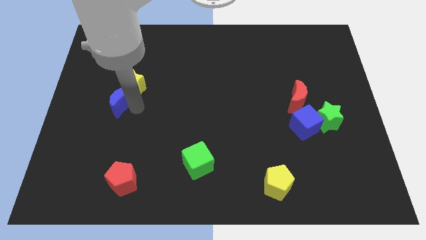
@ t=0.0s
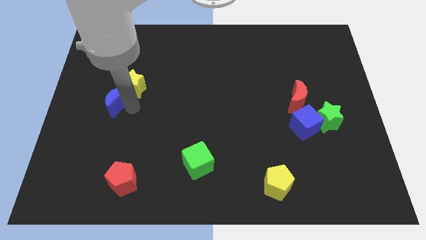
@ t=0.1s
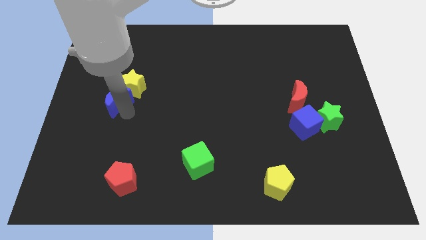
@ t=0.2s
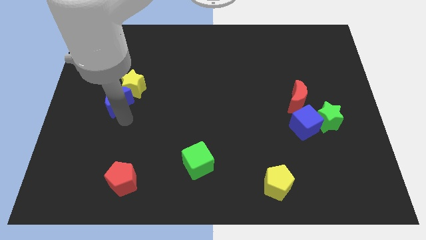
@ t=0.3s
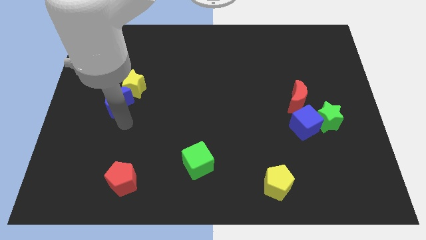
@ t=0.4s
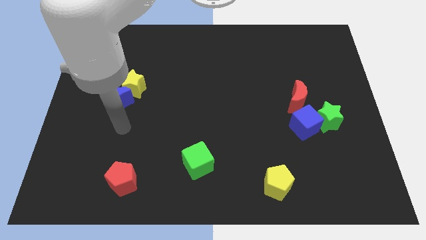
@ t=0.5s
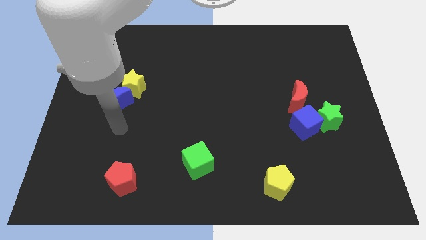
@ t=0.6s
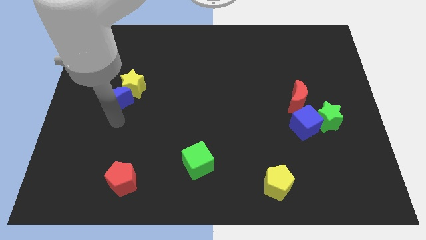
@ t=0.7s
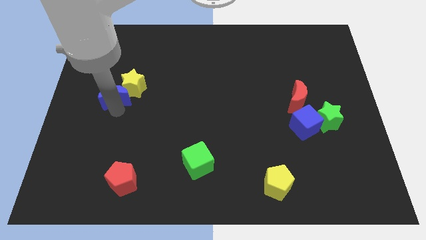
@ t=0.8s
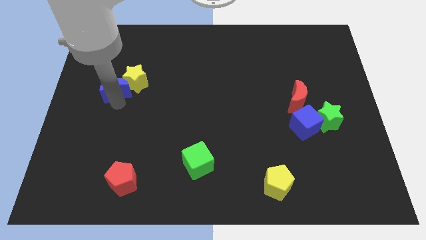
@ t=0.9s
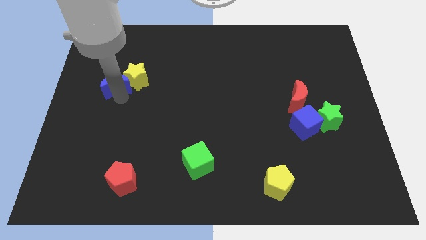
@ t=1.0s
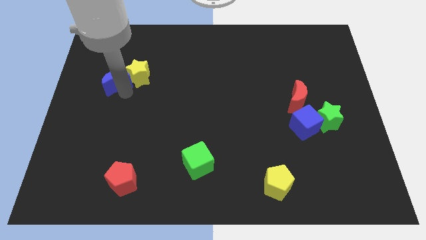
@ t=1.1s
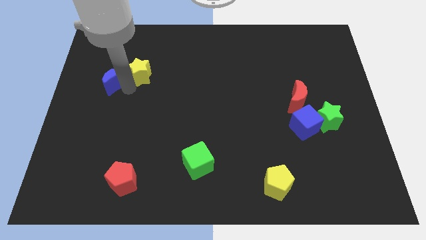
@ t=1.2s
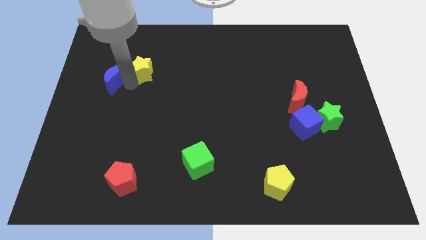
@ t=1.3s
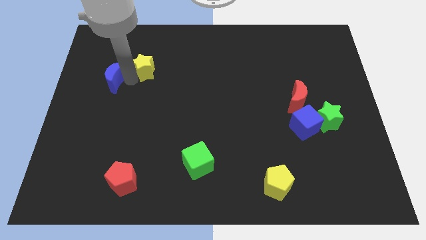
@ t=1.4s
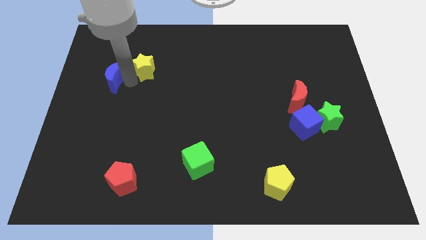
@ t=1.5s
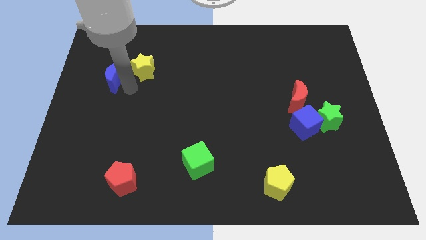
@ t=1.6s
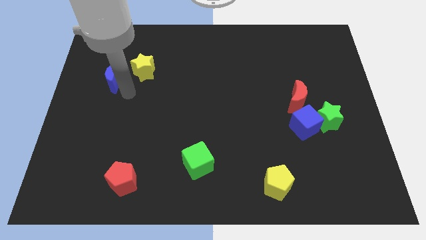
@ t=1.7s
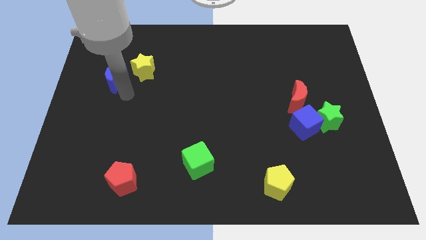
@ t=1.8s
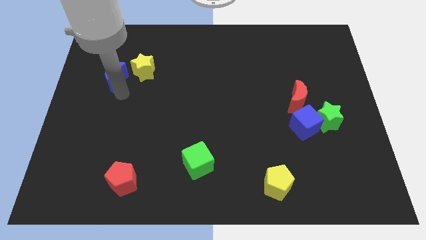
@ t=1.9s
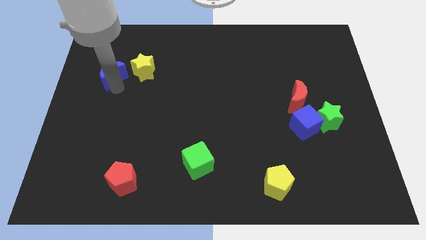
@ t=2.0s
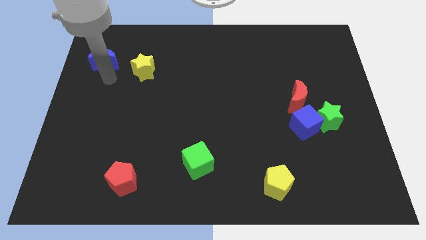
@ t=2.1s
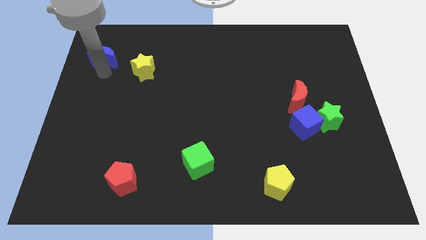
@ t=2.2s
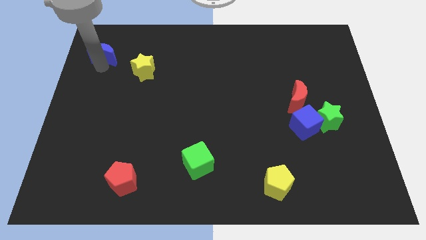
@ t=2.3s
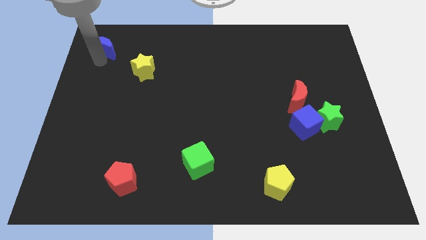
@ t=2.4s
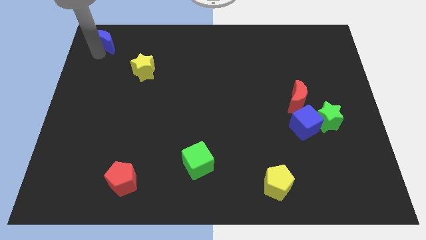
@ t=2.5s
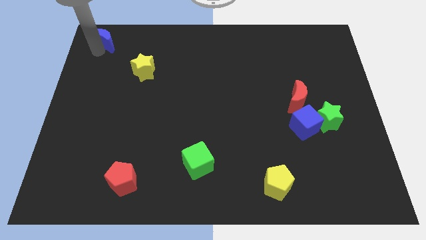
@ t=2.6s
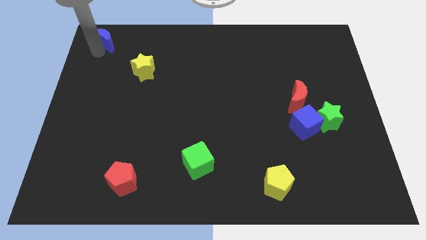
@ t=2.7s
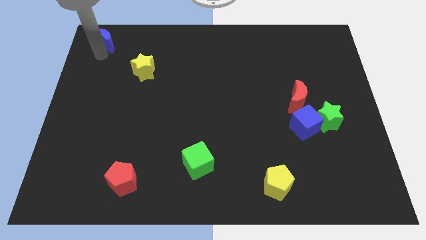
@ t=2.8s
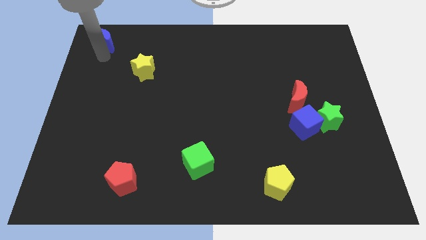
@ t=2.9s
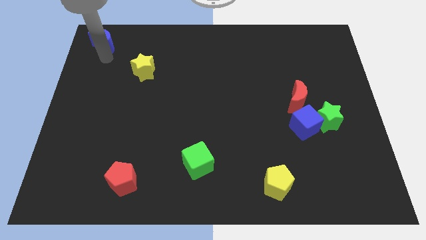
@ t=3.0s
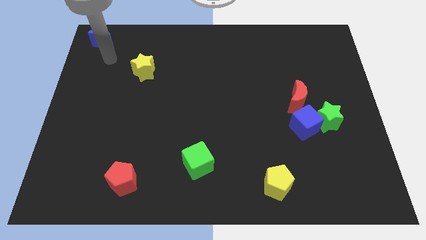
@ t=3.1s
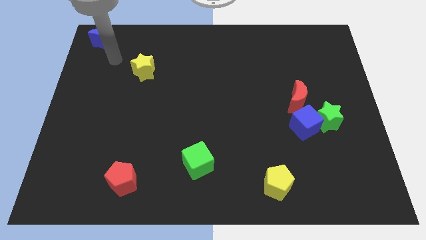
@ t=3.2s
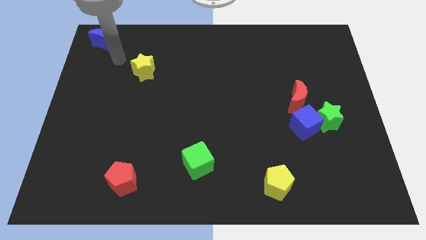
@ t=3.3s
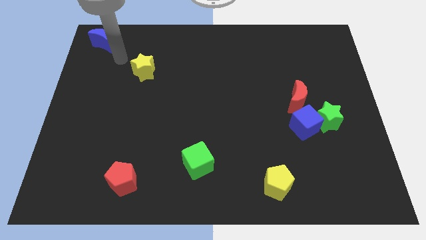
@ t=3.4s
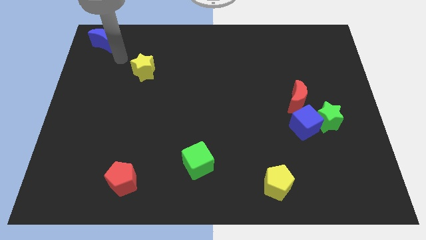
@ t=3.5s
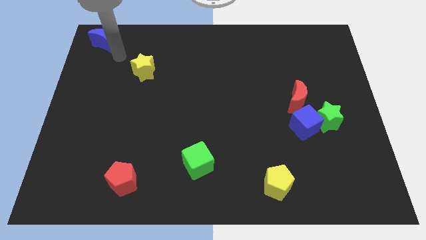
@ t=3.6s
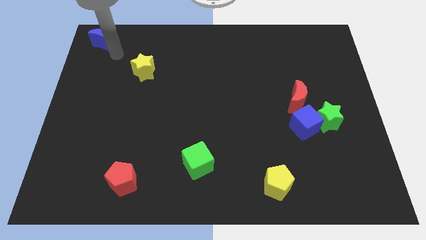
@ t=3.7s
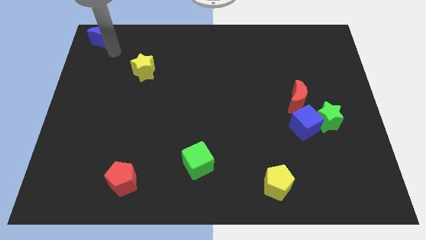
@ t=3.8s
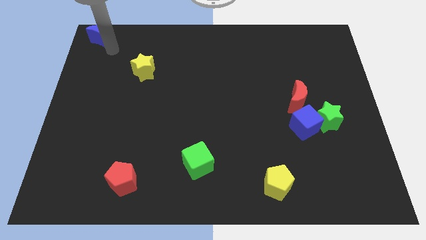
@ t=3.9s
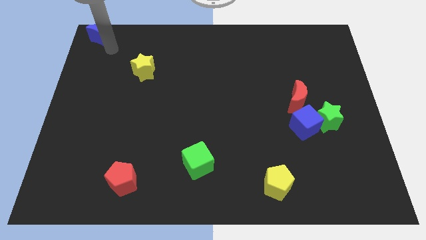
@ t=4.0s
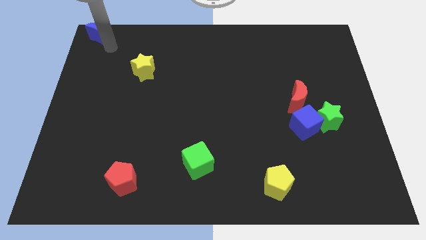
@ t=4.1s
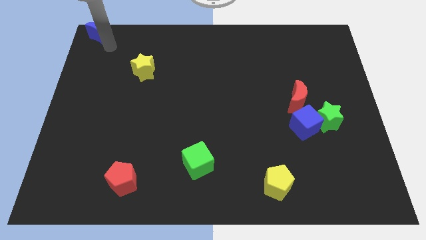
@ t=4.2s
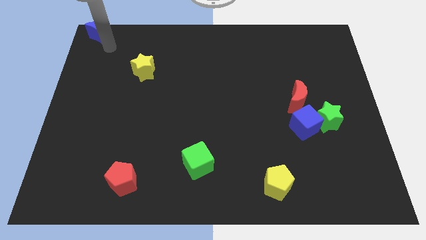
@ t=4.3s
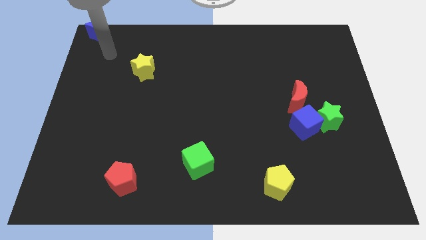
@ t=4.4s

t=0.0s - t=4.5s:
move the blue crescent to the top left to the board

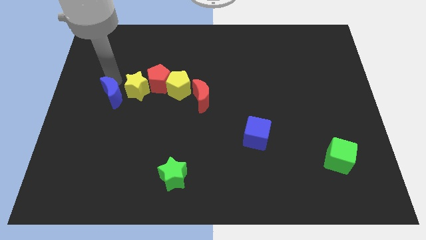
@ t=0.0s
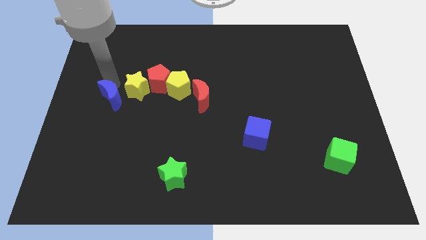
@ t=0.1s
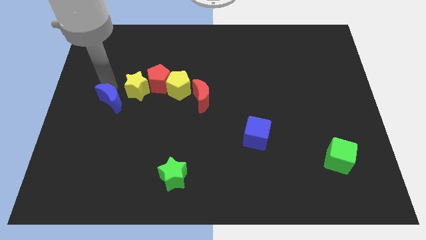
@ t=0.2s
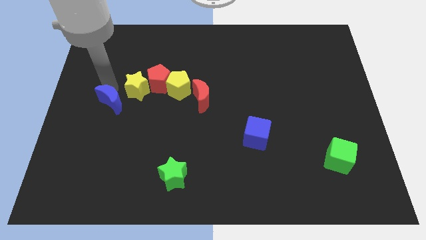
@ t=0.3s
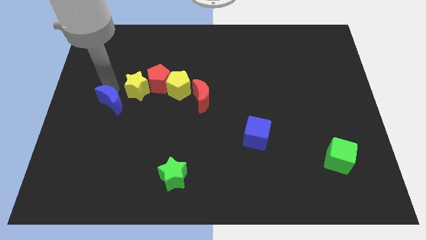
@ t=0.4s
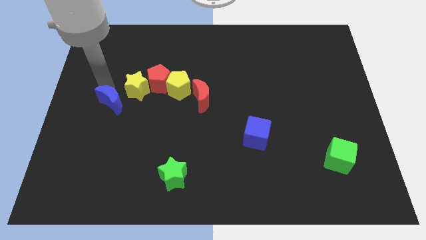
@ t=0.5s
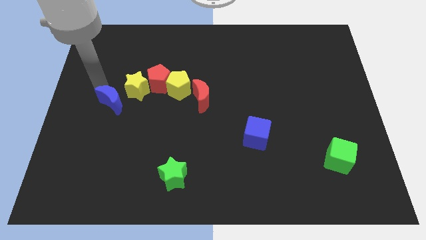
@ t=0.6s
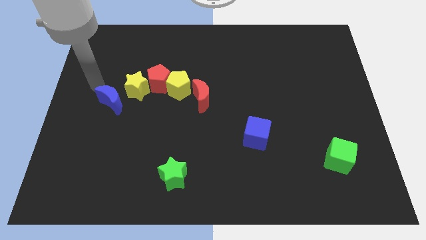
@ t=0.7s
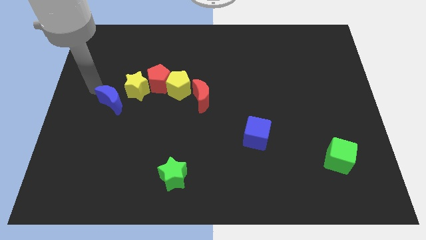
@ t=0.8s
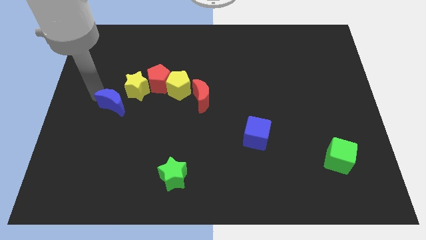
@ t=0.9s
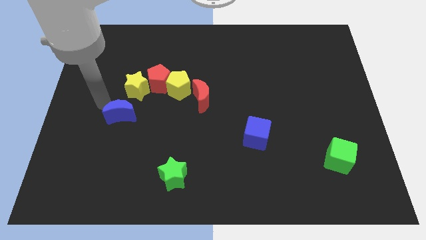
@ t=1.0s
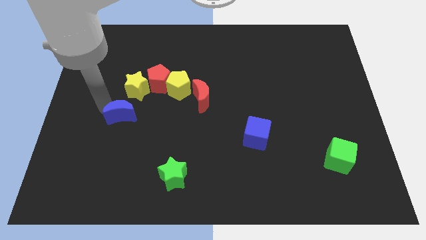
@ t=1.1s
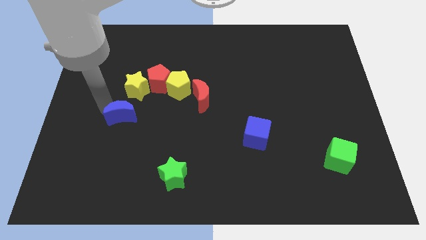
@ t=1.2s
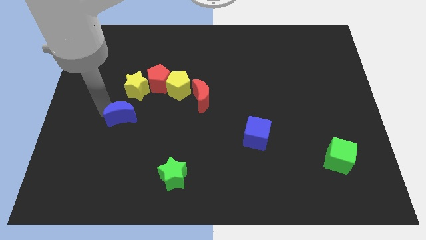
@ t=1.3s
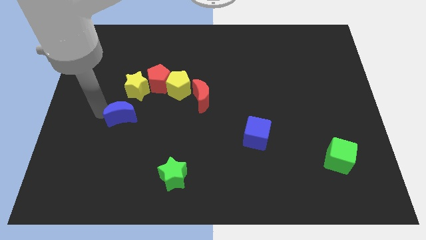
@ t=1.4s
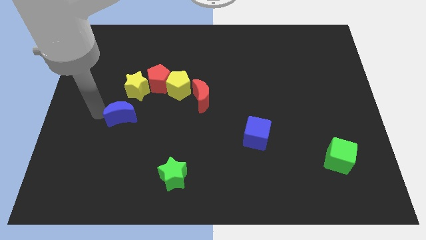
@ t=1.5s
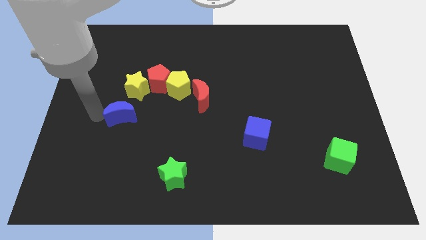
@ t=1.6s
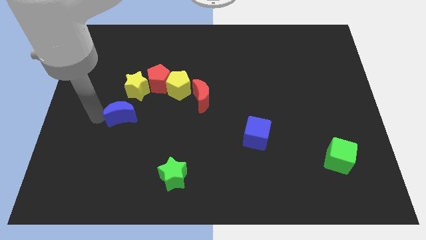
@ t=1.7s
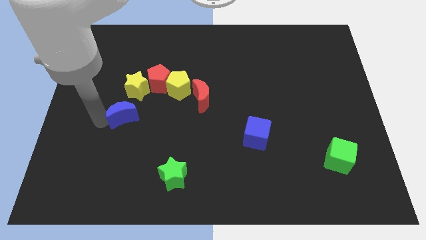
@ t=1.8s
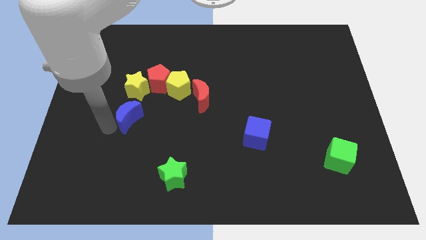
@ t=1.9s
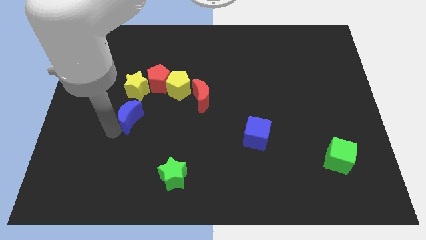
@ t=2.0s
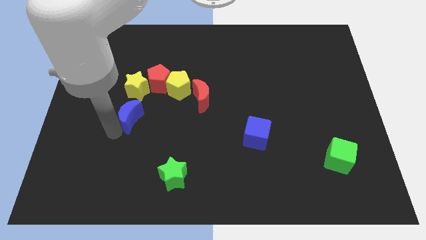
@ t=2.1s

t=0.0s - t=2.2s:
slide blue moon below yellow star

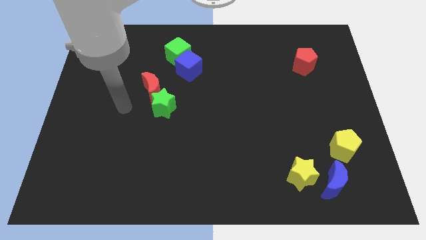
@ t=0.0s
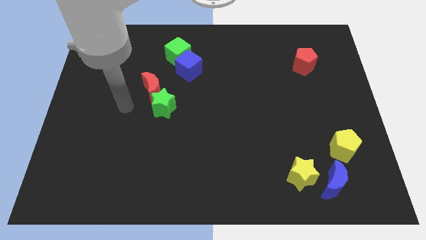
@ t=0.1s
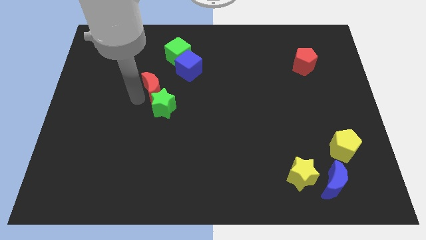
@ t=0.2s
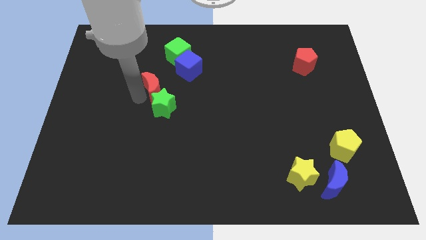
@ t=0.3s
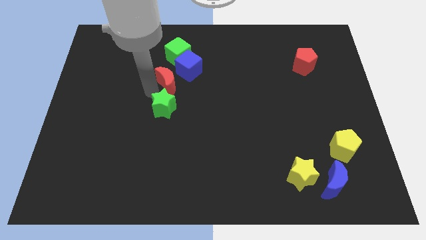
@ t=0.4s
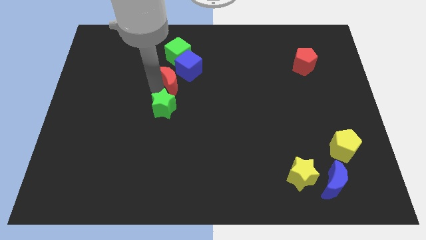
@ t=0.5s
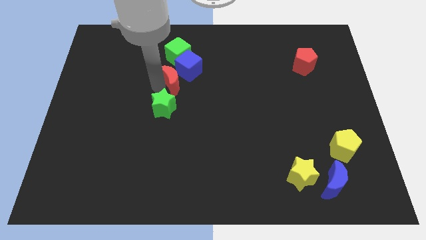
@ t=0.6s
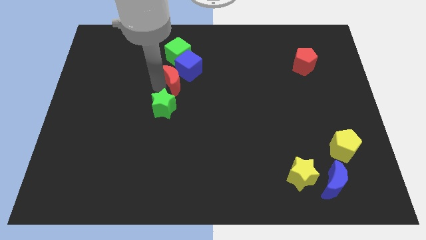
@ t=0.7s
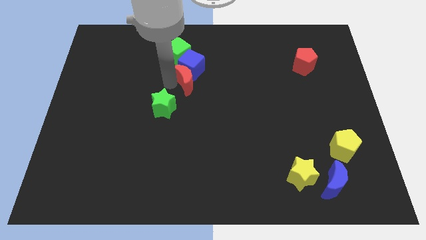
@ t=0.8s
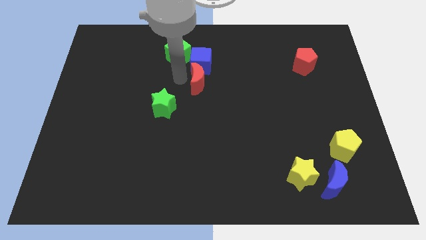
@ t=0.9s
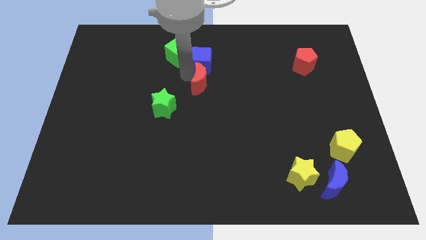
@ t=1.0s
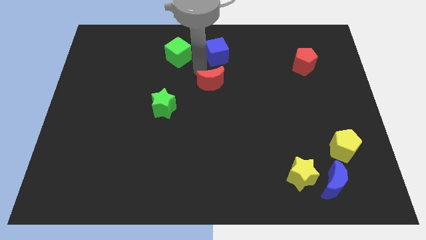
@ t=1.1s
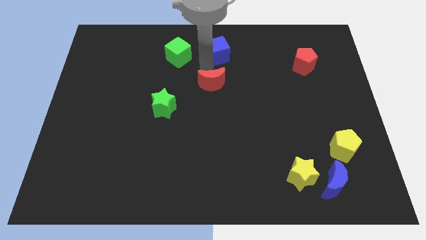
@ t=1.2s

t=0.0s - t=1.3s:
move the red crescent away from the green star

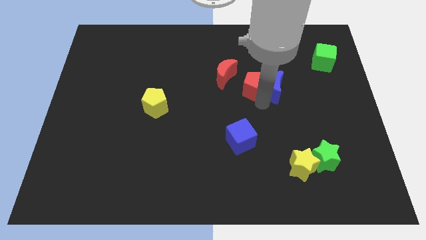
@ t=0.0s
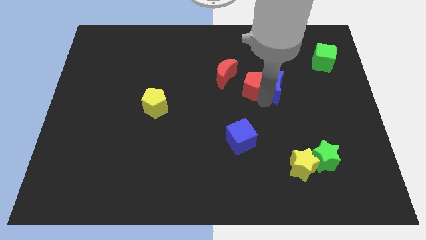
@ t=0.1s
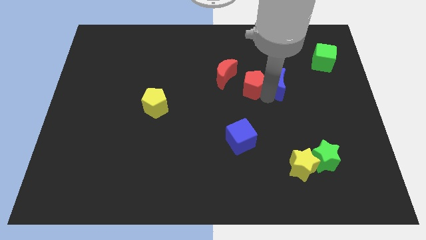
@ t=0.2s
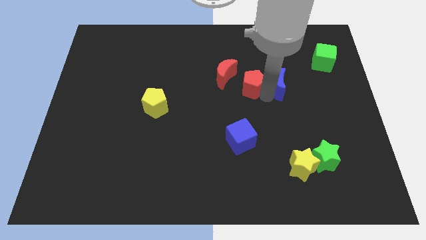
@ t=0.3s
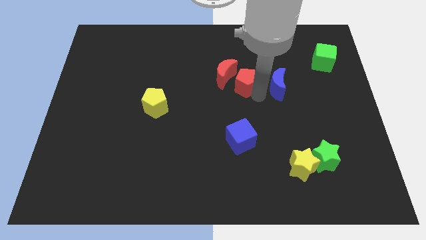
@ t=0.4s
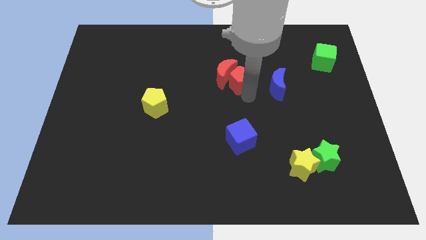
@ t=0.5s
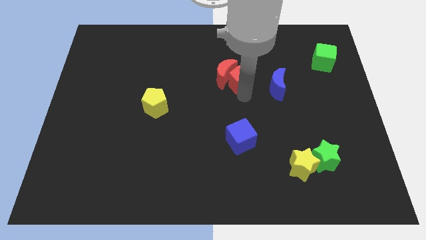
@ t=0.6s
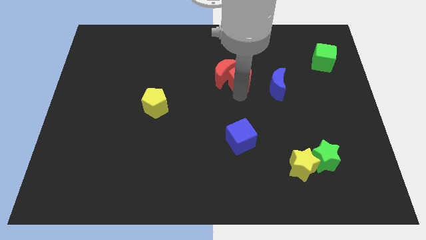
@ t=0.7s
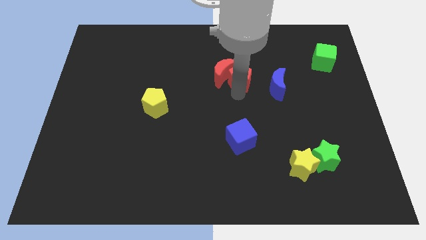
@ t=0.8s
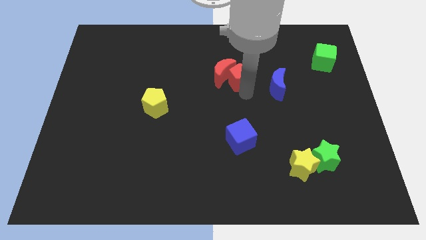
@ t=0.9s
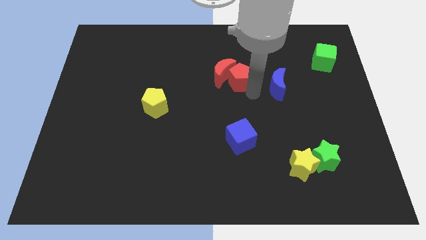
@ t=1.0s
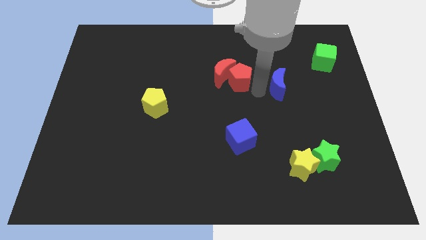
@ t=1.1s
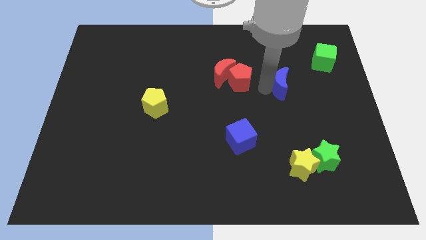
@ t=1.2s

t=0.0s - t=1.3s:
push the red pentagon into the red moon
